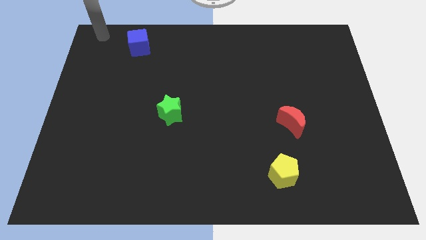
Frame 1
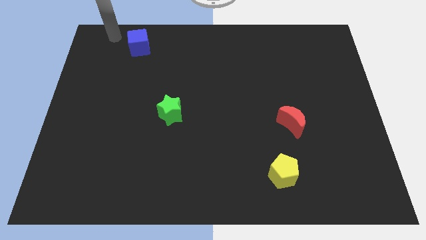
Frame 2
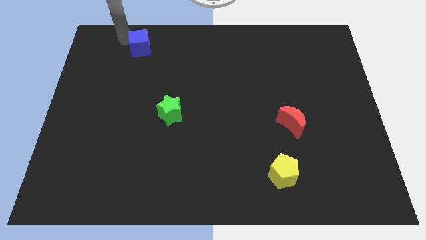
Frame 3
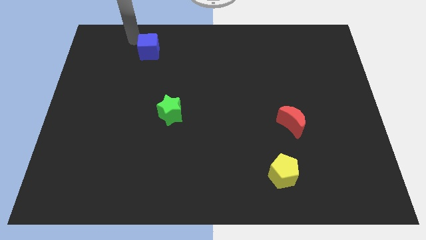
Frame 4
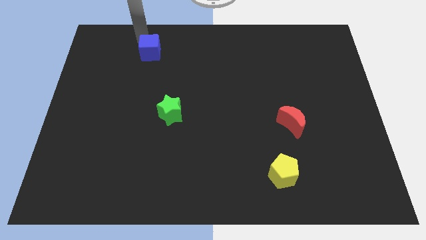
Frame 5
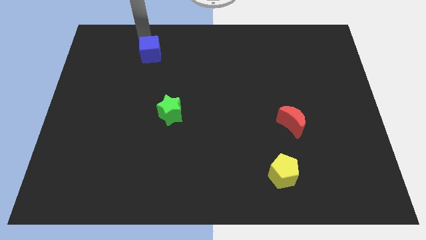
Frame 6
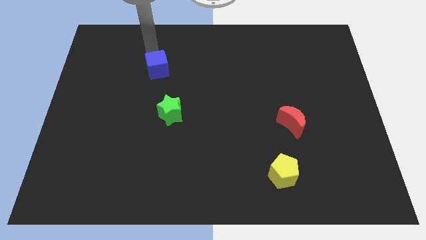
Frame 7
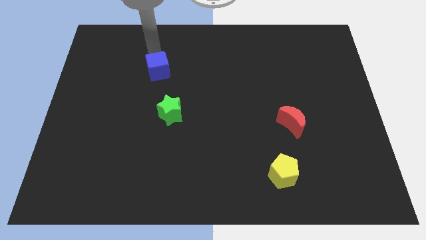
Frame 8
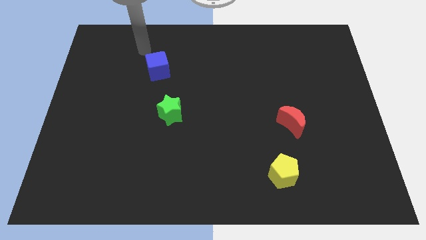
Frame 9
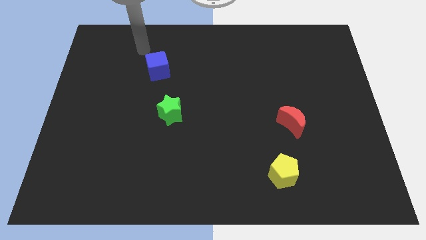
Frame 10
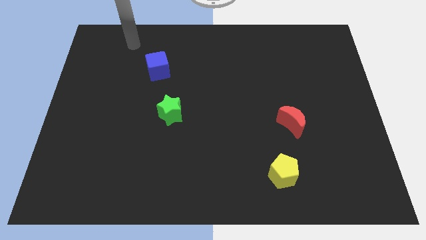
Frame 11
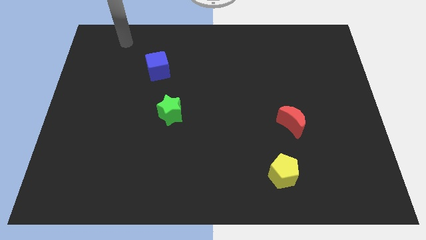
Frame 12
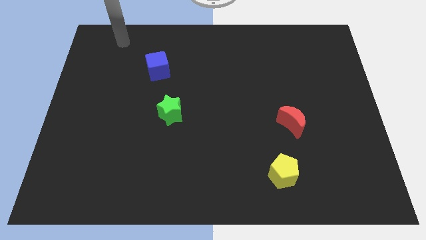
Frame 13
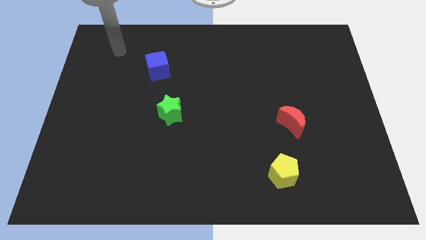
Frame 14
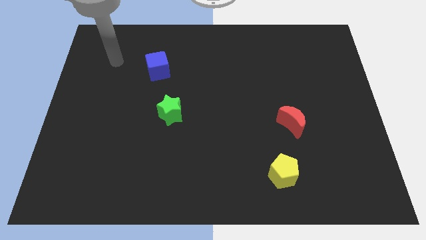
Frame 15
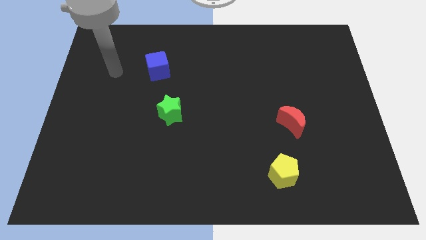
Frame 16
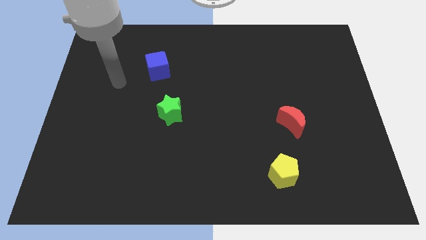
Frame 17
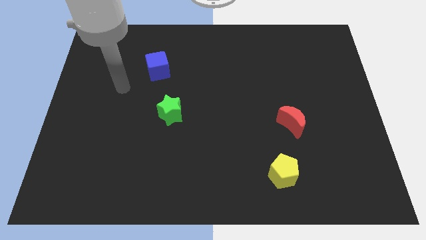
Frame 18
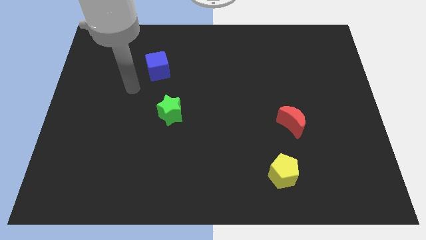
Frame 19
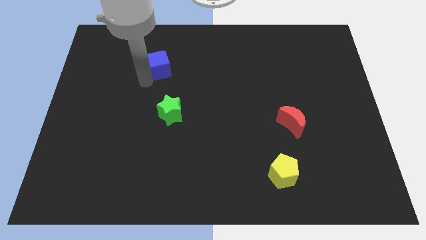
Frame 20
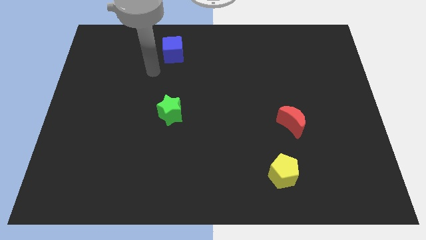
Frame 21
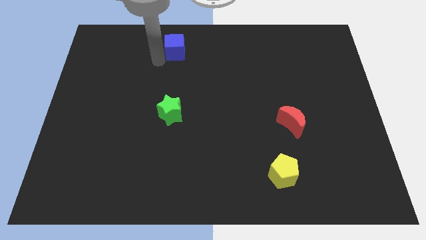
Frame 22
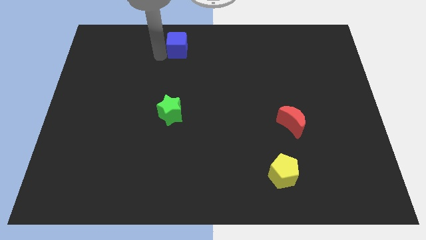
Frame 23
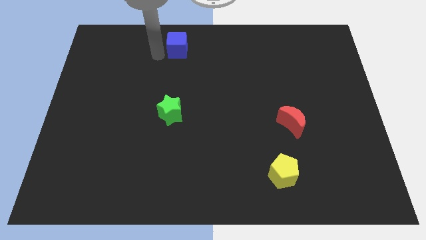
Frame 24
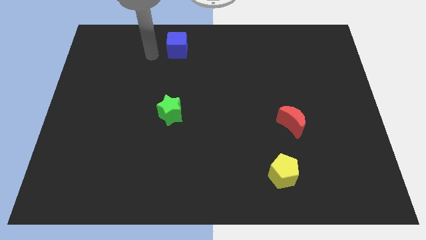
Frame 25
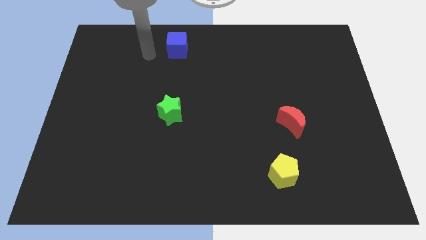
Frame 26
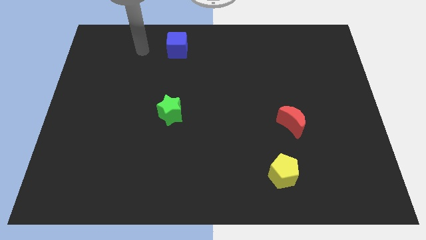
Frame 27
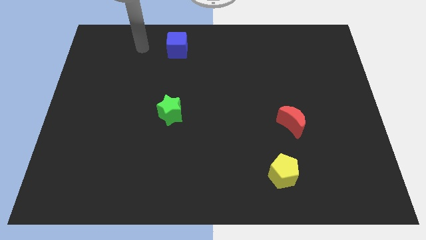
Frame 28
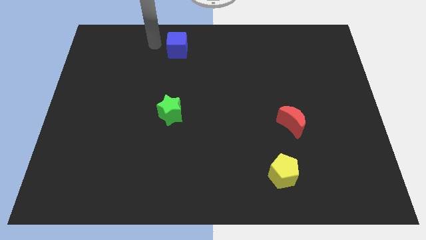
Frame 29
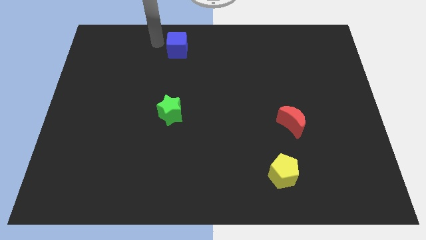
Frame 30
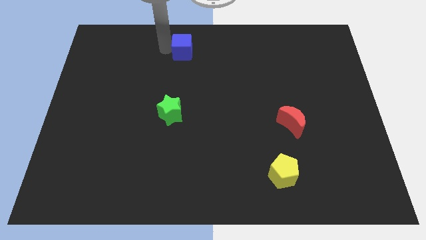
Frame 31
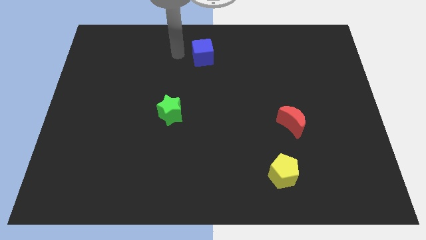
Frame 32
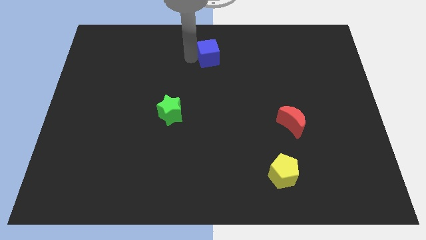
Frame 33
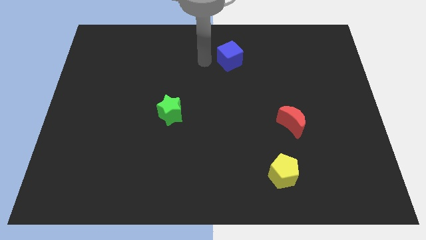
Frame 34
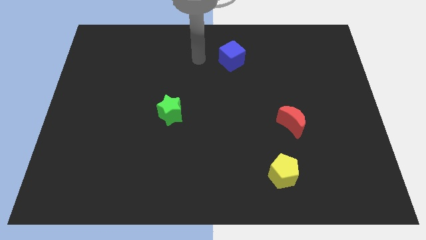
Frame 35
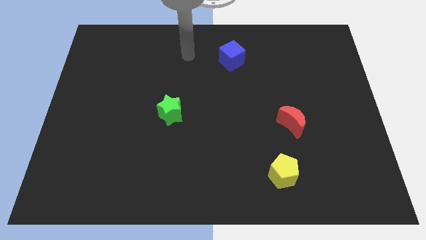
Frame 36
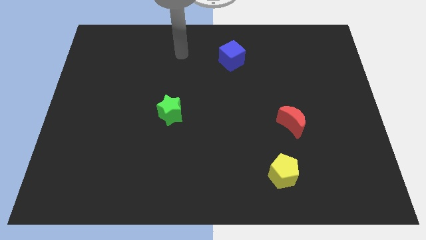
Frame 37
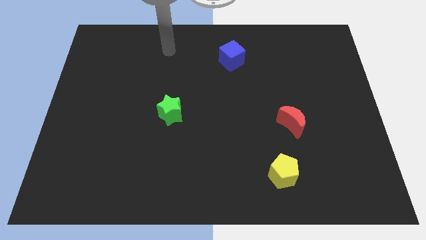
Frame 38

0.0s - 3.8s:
place the blue cube diagonally at the top right side of the green star

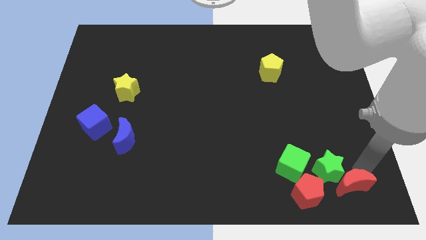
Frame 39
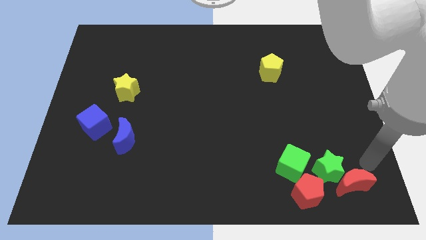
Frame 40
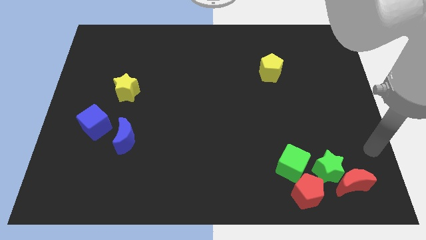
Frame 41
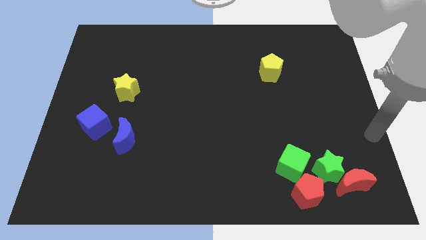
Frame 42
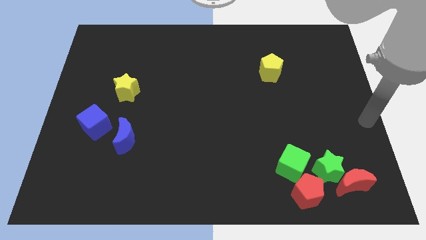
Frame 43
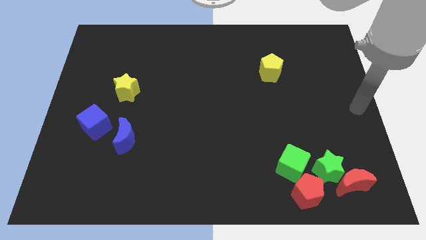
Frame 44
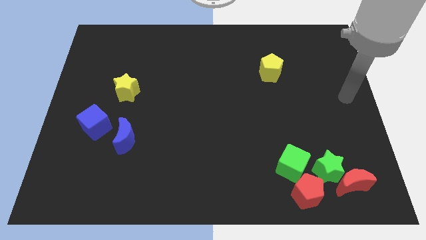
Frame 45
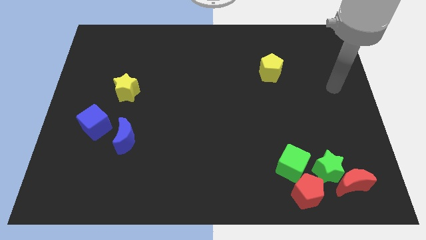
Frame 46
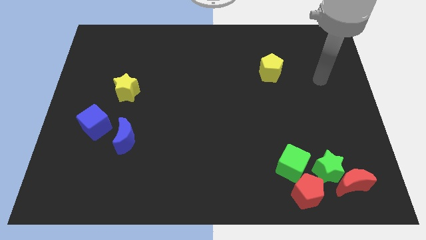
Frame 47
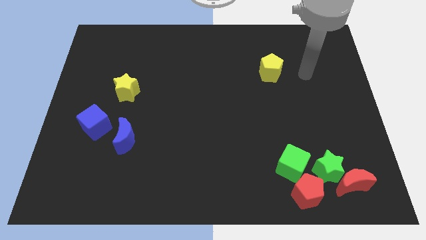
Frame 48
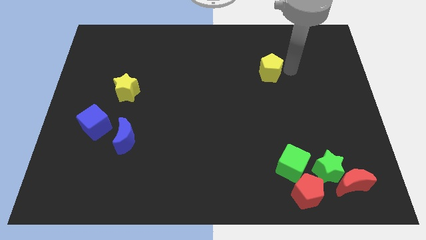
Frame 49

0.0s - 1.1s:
go away from the red moon

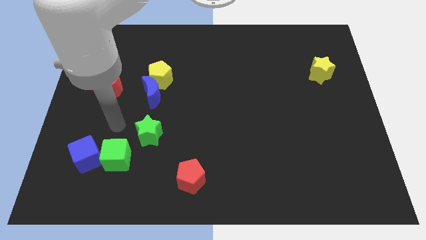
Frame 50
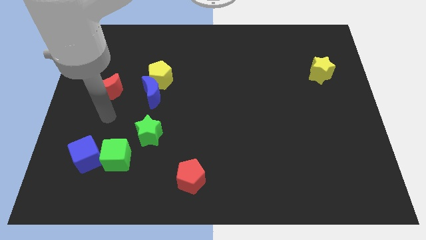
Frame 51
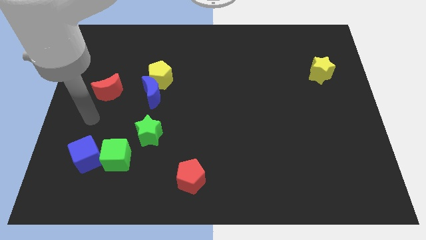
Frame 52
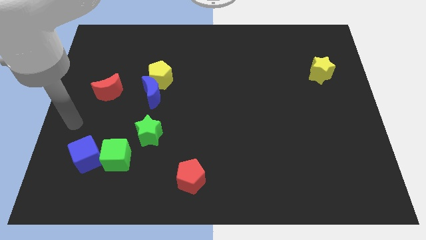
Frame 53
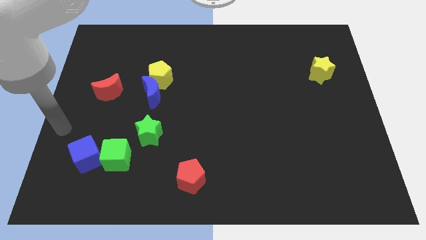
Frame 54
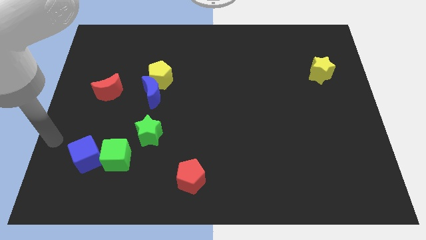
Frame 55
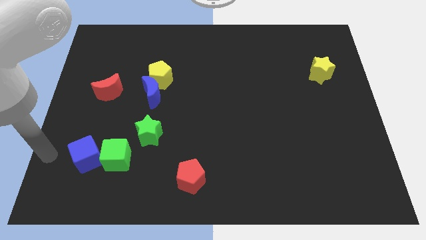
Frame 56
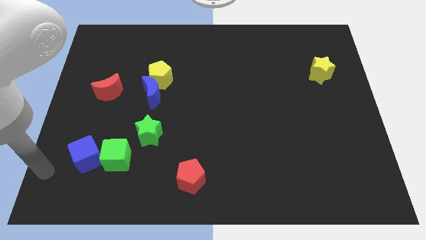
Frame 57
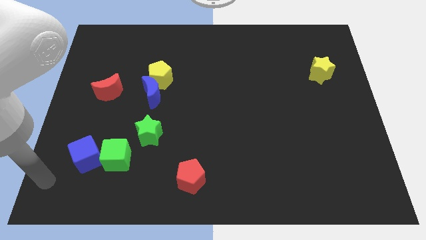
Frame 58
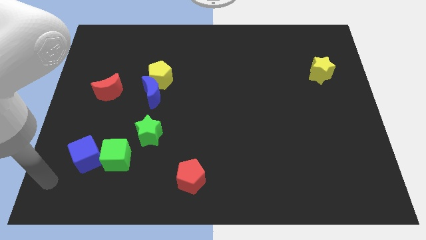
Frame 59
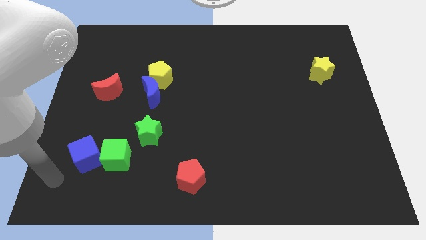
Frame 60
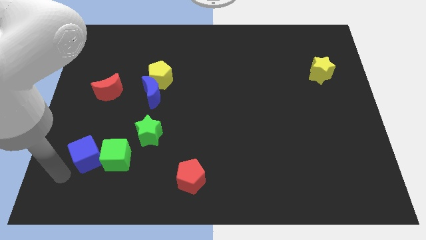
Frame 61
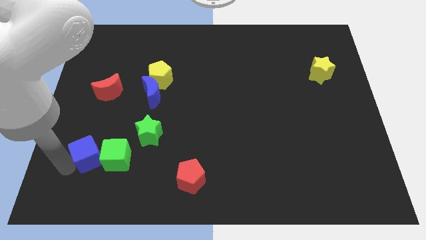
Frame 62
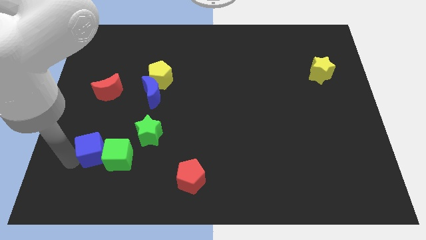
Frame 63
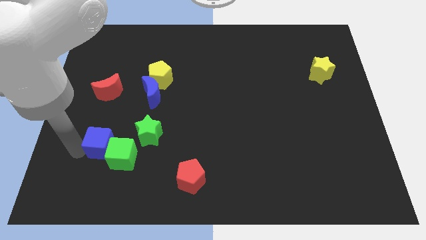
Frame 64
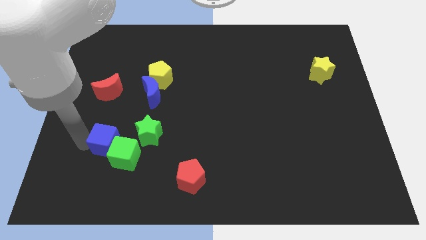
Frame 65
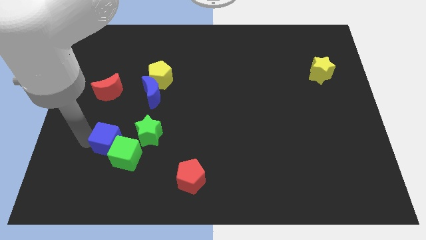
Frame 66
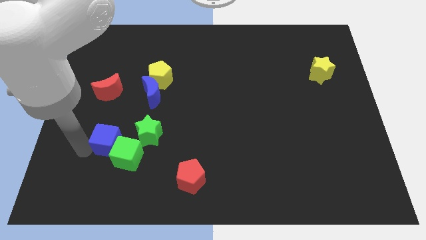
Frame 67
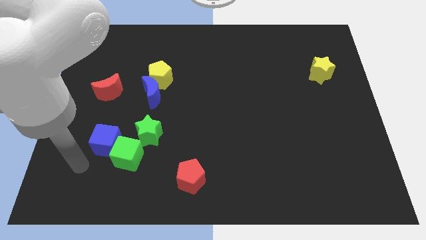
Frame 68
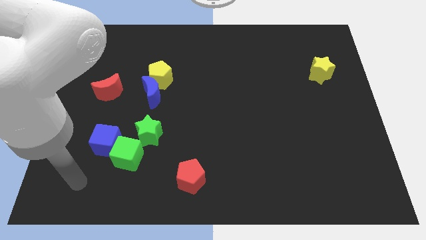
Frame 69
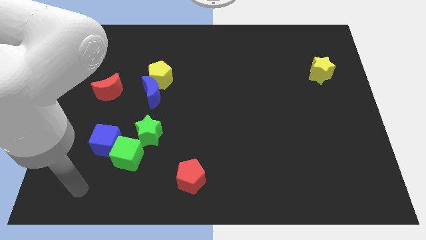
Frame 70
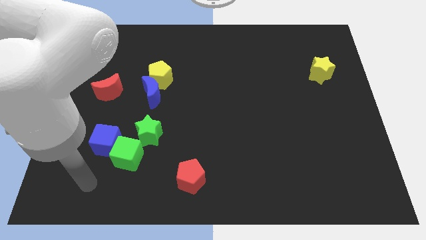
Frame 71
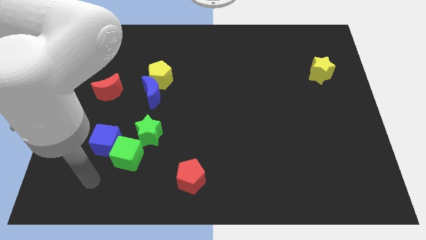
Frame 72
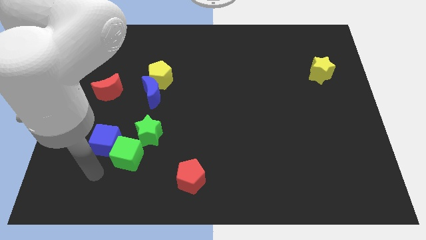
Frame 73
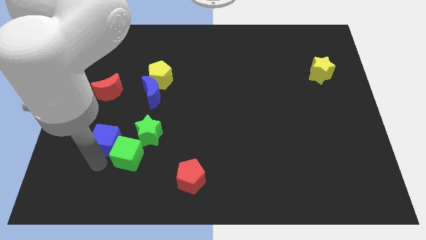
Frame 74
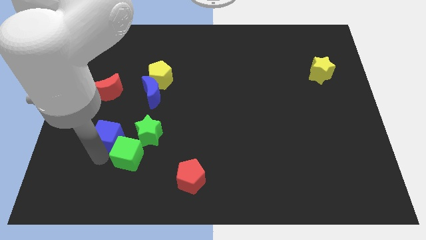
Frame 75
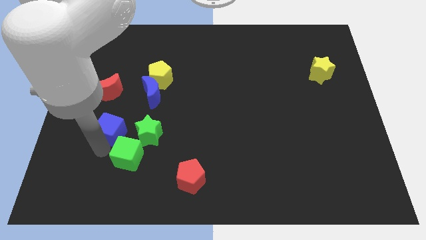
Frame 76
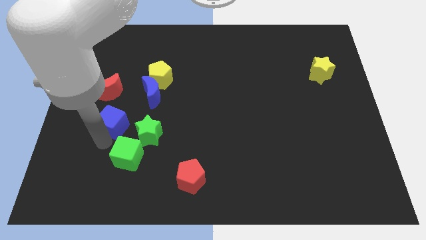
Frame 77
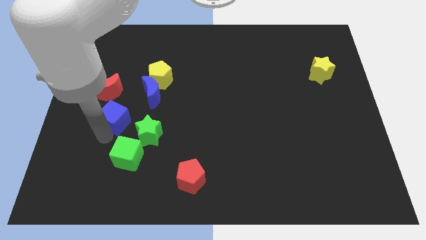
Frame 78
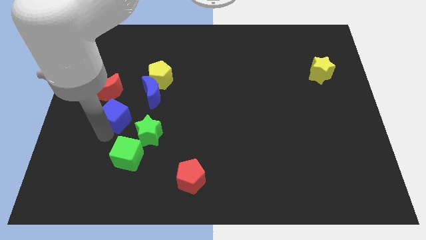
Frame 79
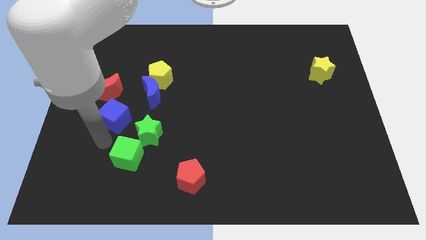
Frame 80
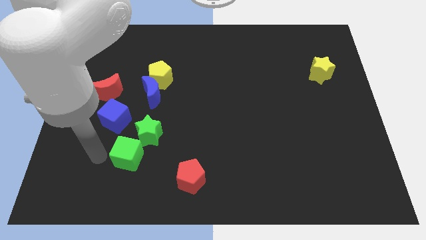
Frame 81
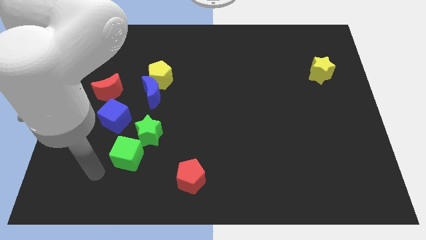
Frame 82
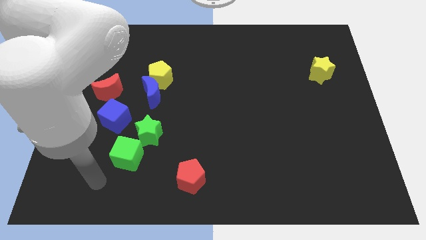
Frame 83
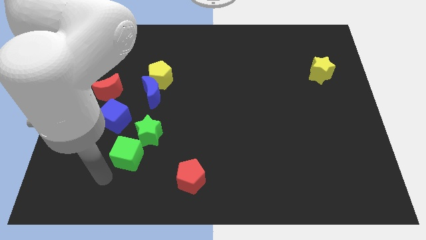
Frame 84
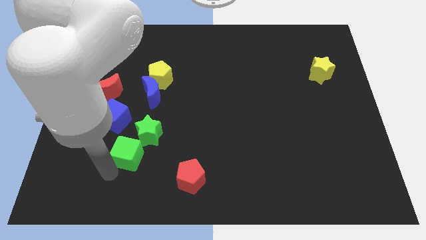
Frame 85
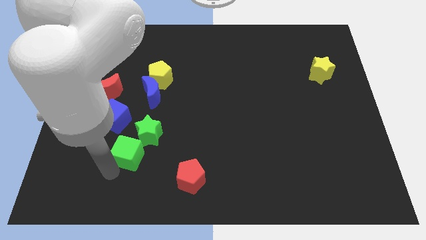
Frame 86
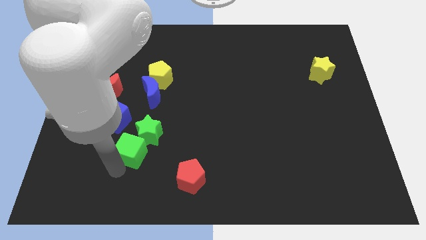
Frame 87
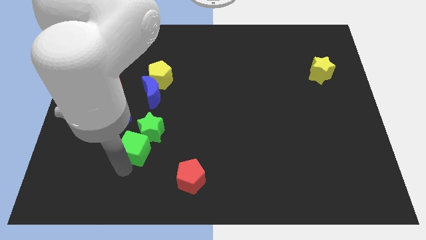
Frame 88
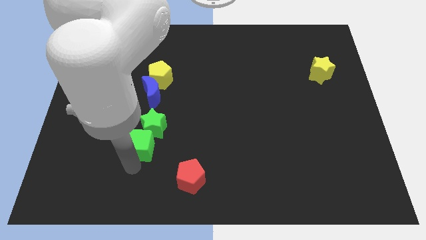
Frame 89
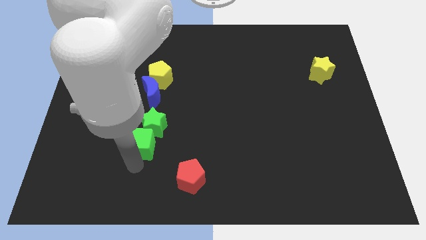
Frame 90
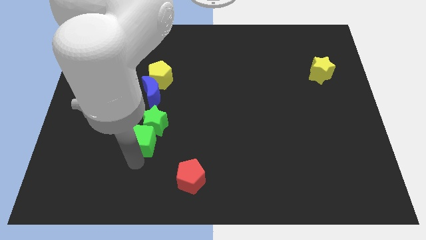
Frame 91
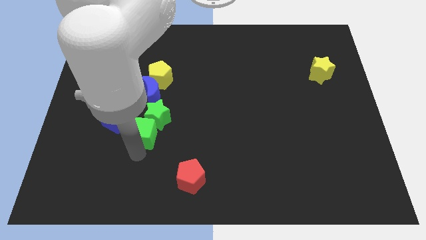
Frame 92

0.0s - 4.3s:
push green cube into green star
